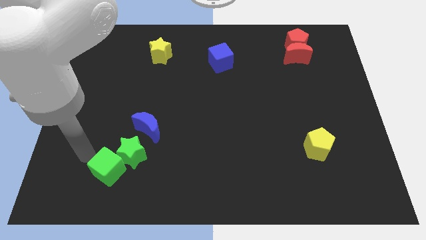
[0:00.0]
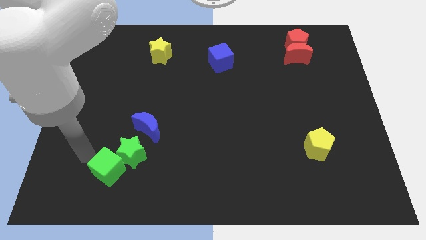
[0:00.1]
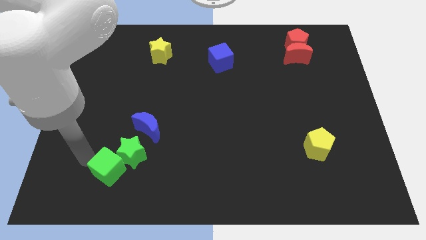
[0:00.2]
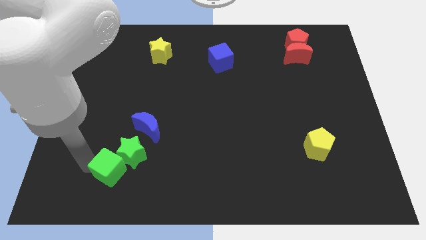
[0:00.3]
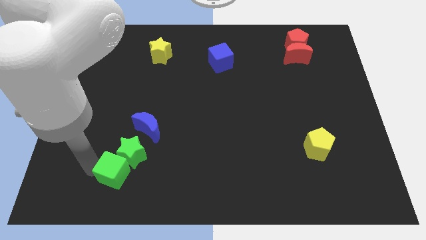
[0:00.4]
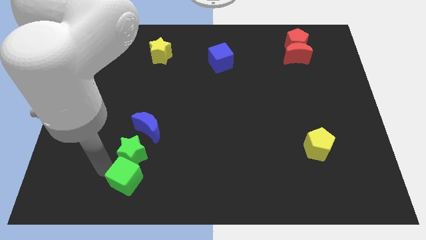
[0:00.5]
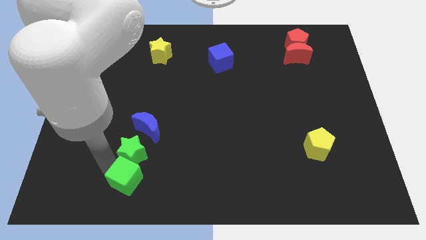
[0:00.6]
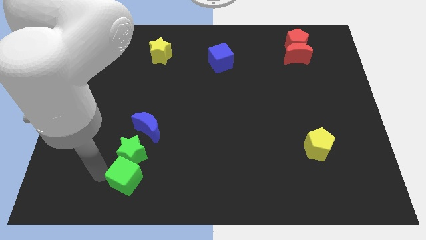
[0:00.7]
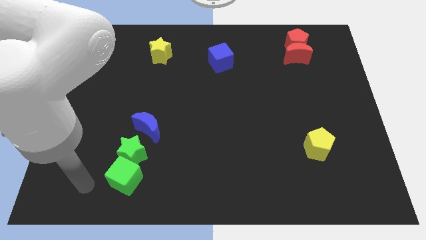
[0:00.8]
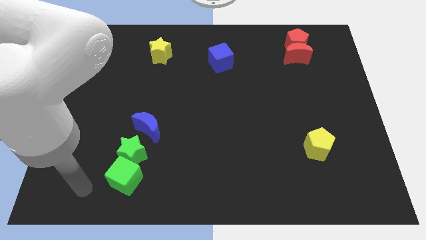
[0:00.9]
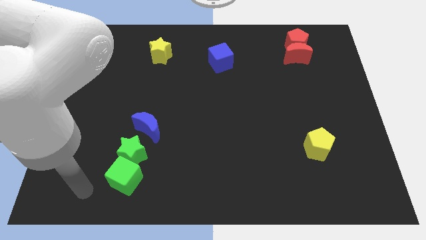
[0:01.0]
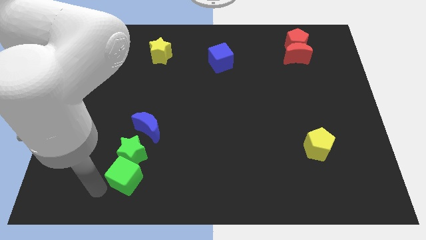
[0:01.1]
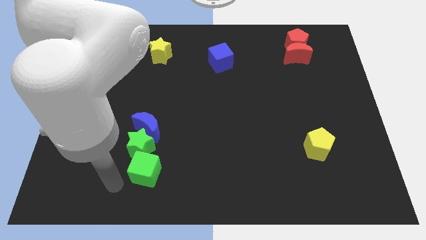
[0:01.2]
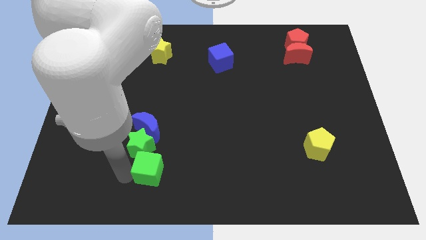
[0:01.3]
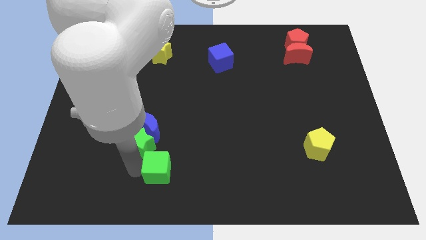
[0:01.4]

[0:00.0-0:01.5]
move green cube slightly right

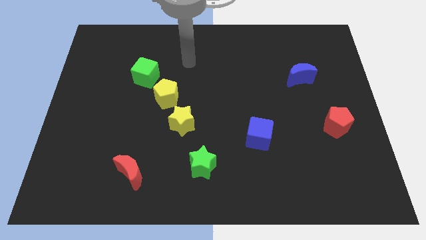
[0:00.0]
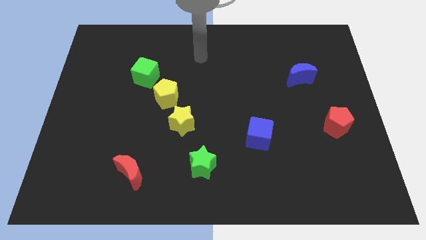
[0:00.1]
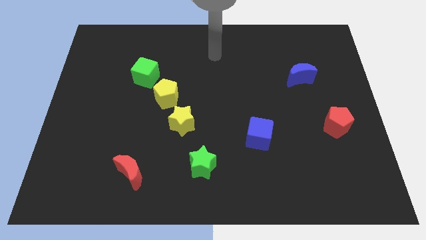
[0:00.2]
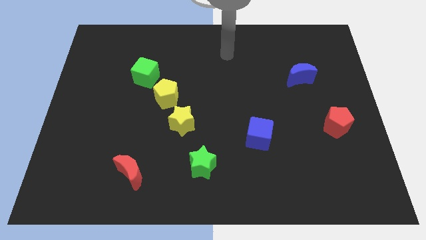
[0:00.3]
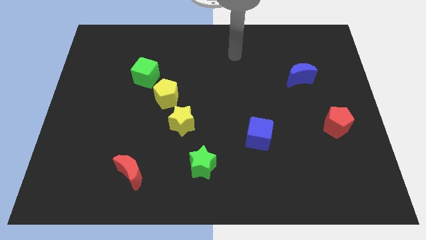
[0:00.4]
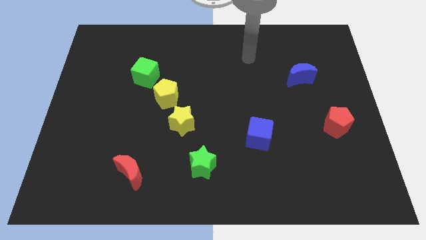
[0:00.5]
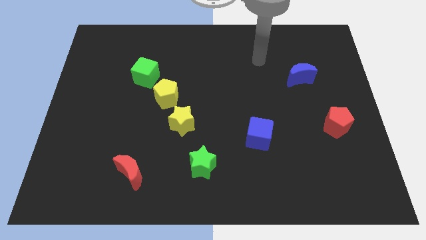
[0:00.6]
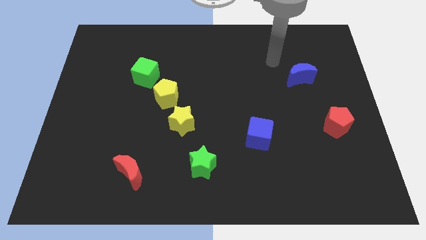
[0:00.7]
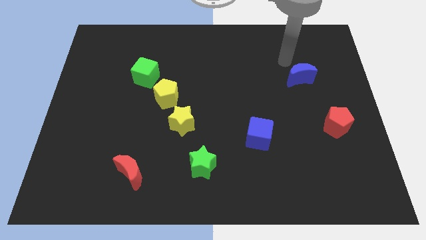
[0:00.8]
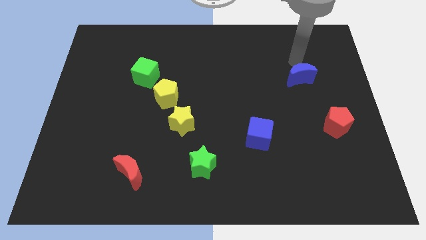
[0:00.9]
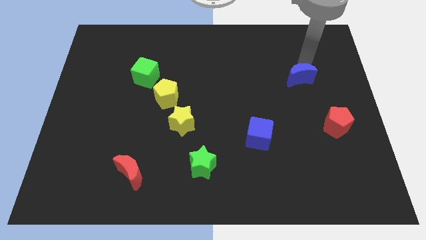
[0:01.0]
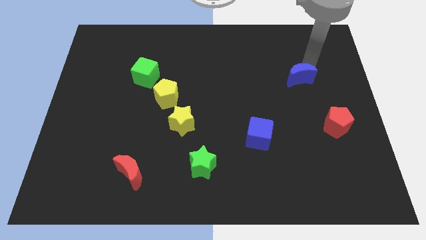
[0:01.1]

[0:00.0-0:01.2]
put your arm at the top of blue moon

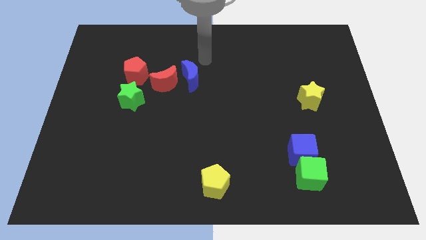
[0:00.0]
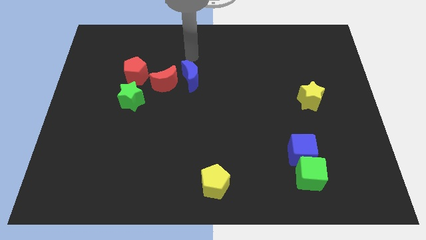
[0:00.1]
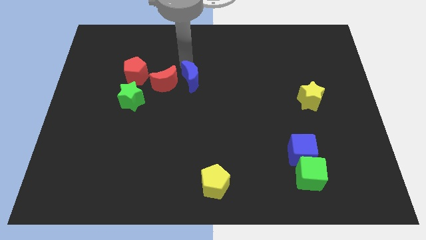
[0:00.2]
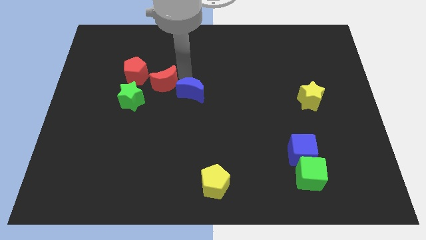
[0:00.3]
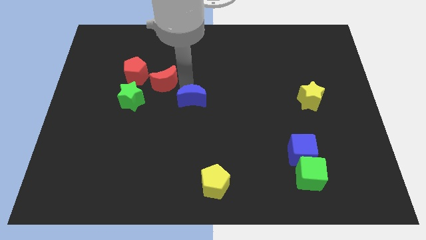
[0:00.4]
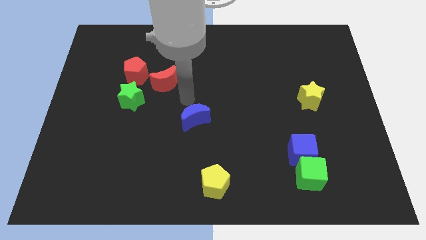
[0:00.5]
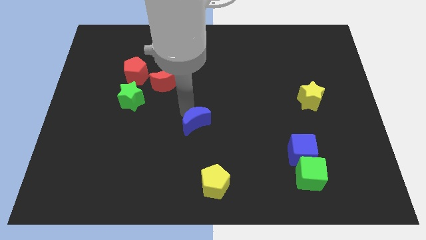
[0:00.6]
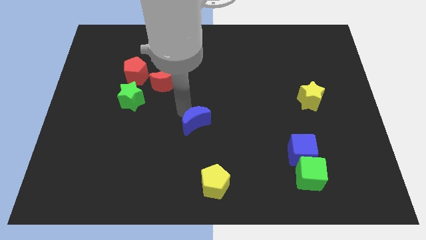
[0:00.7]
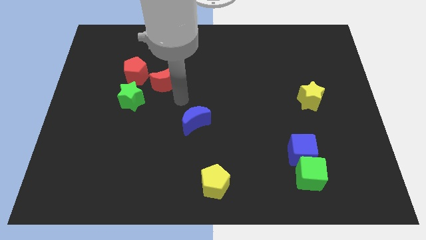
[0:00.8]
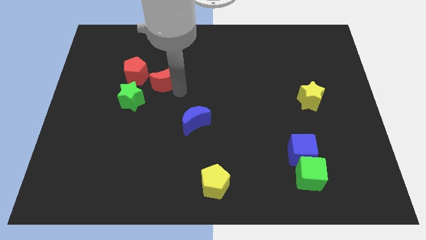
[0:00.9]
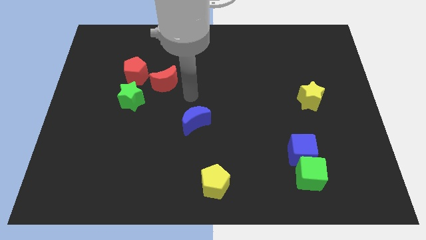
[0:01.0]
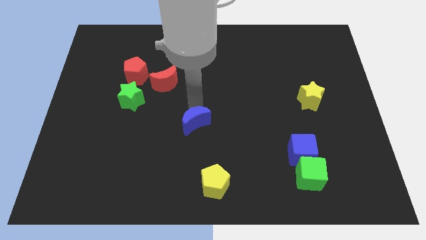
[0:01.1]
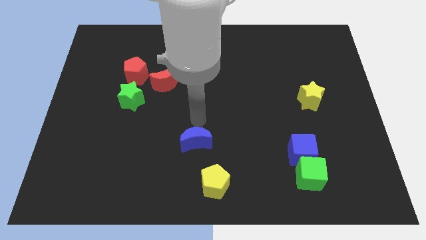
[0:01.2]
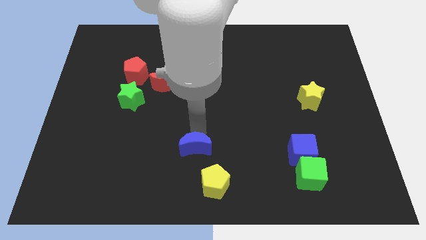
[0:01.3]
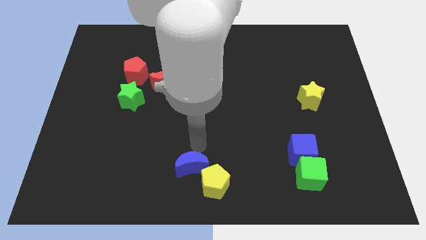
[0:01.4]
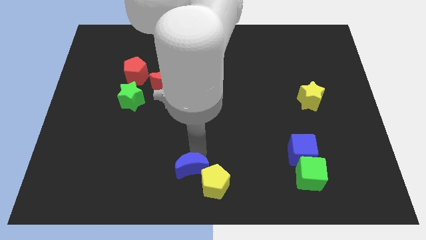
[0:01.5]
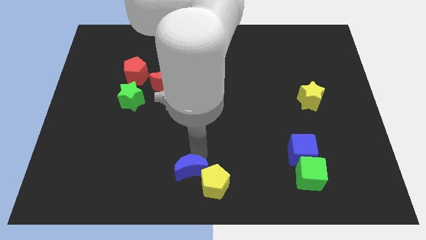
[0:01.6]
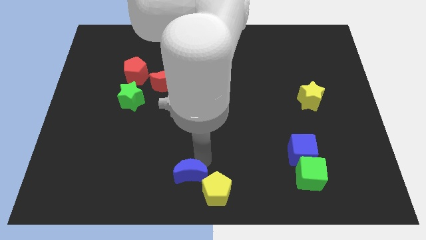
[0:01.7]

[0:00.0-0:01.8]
push the blue crescent towards the yellow pentagon

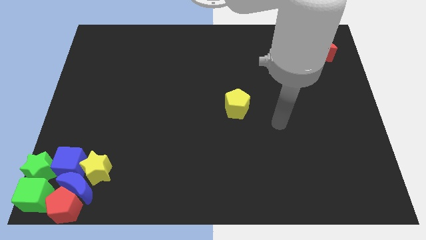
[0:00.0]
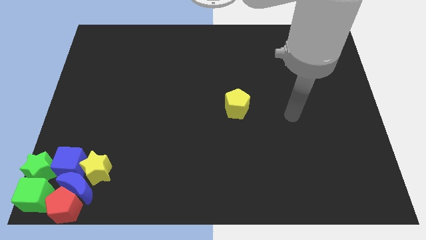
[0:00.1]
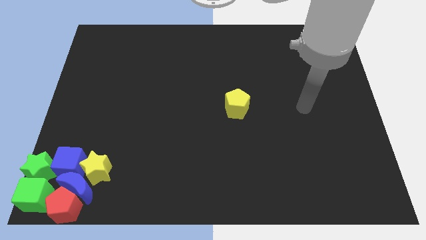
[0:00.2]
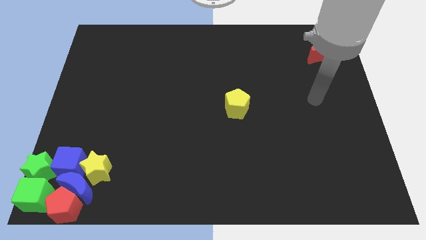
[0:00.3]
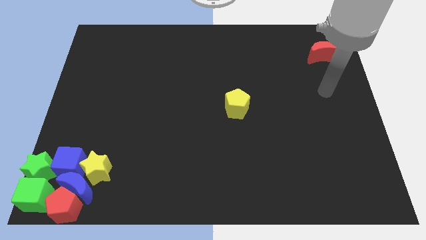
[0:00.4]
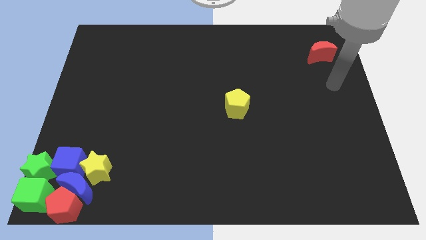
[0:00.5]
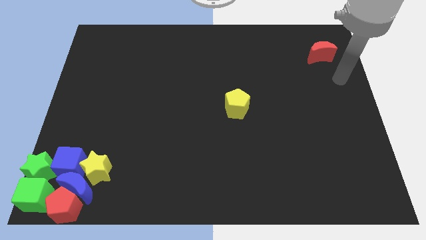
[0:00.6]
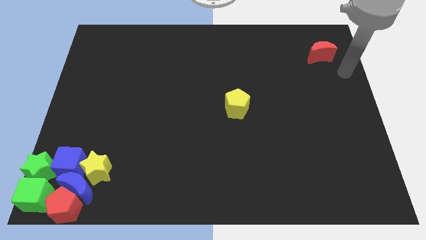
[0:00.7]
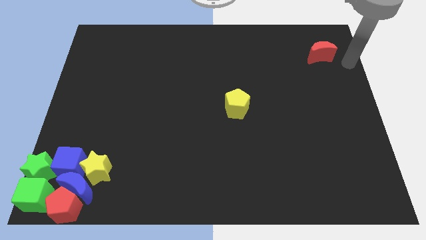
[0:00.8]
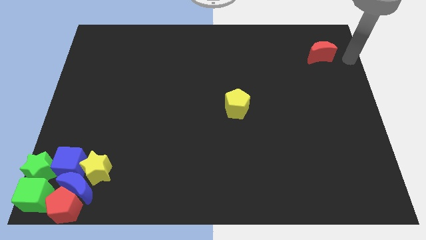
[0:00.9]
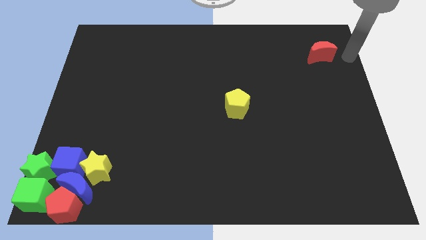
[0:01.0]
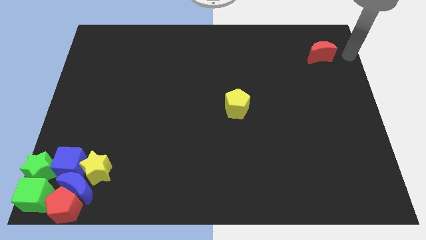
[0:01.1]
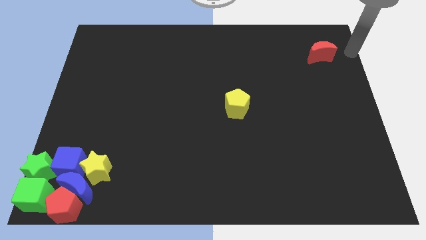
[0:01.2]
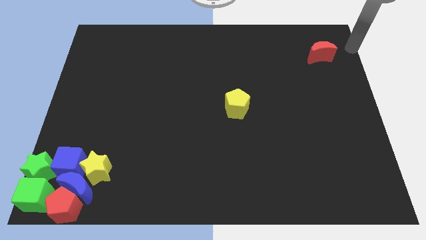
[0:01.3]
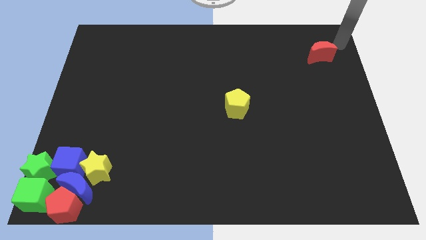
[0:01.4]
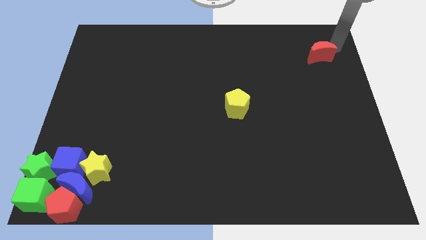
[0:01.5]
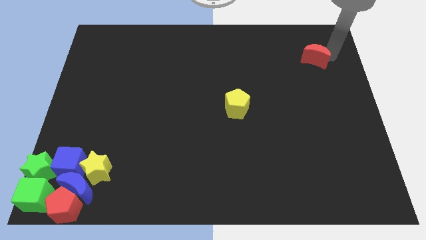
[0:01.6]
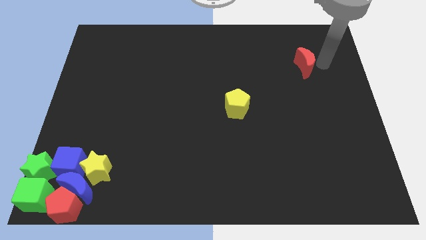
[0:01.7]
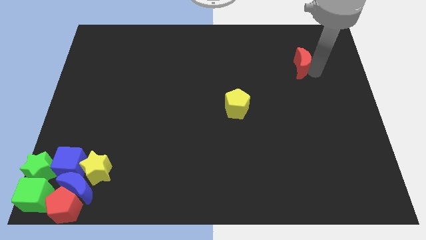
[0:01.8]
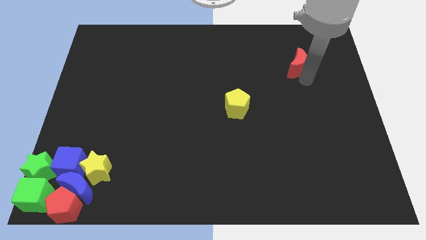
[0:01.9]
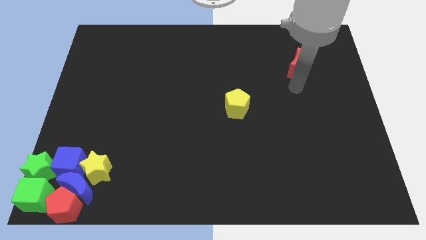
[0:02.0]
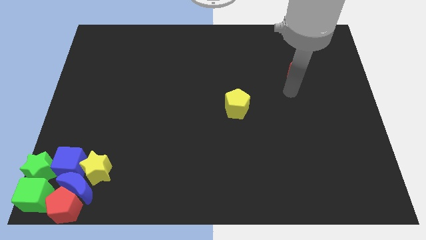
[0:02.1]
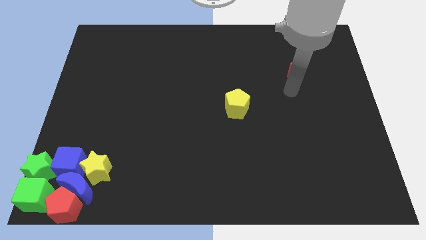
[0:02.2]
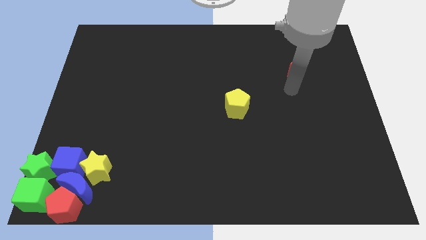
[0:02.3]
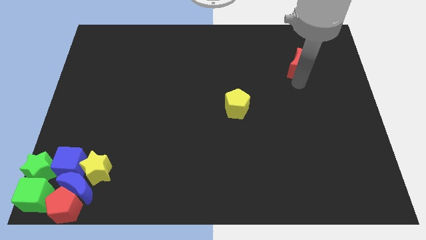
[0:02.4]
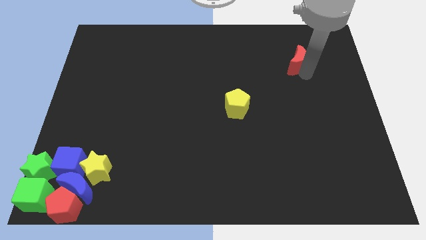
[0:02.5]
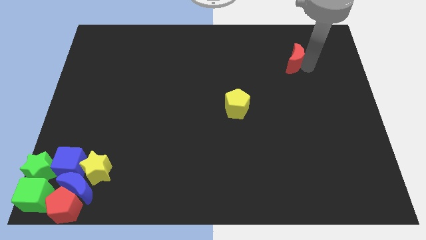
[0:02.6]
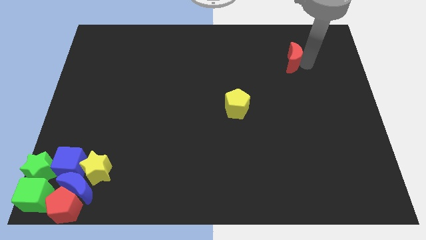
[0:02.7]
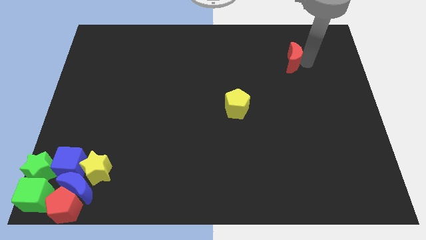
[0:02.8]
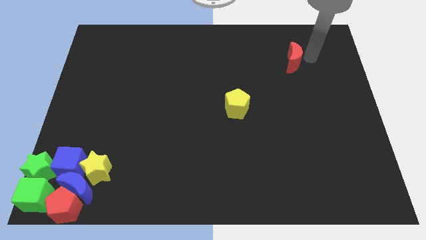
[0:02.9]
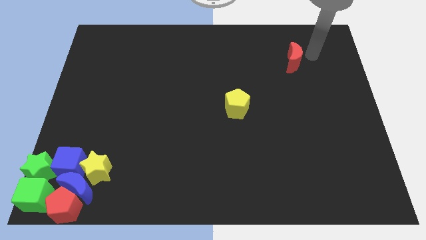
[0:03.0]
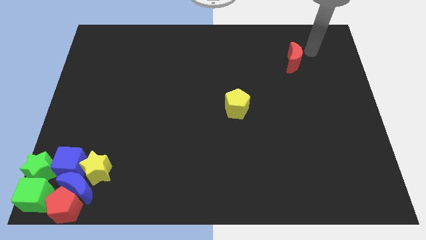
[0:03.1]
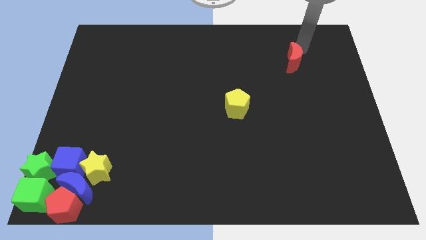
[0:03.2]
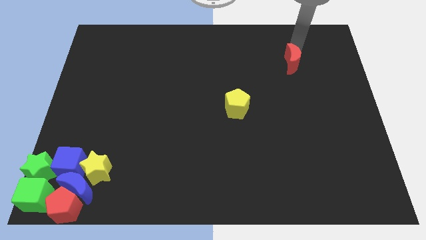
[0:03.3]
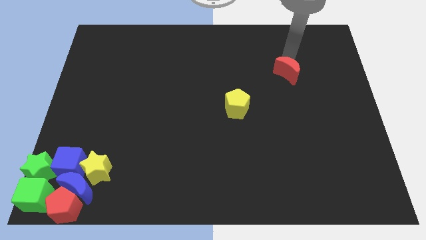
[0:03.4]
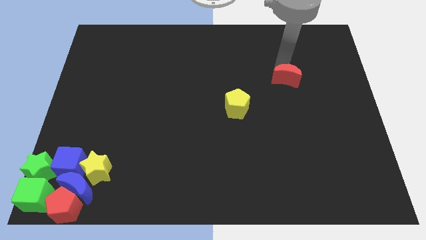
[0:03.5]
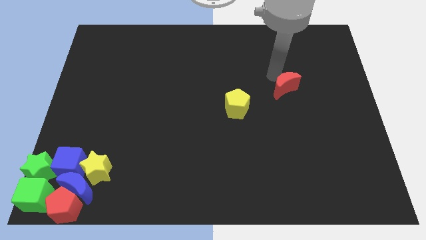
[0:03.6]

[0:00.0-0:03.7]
slide the red moon diagonally at the top right of the yellow pentagon

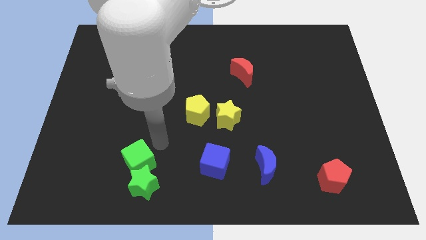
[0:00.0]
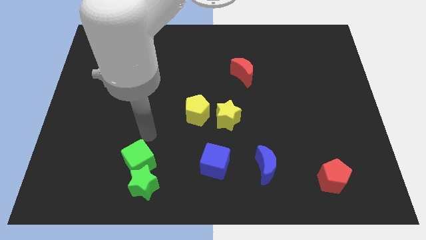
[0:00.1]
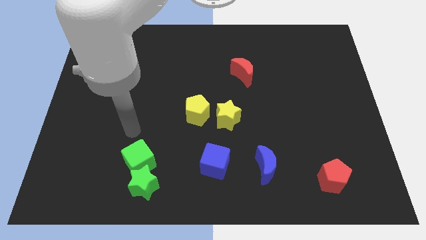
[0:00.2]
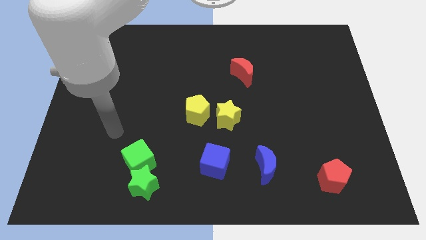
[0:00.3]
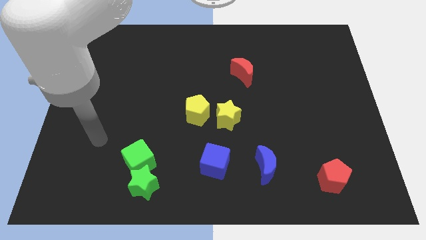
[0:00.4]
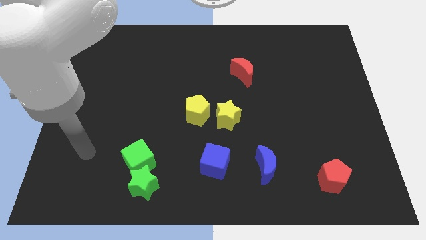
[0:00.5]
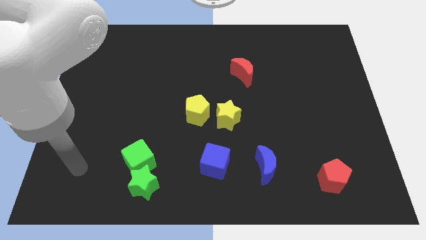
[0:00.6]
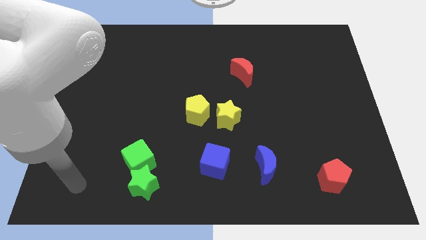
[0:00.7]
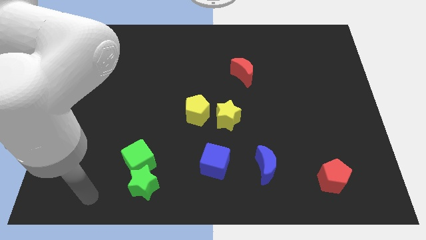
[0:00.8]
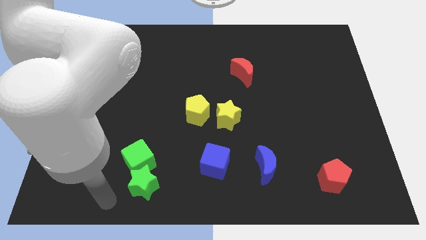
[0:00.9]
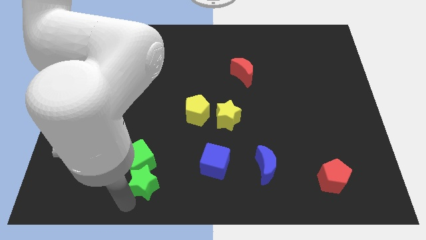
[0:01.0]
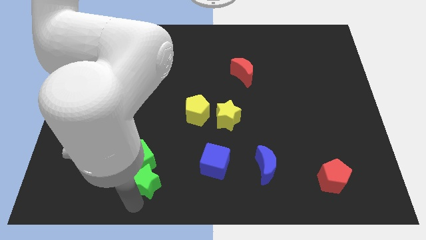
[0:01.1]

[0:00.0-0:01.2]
touch the bottom left of the green star
